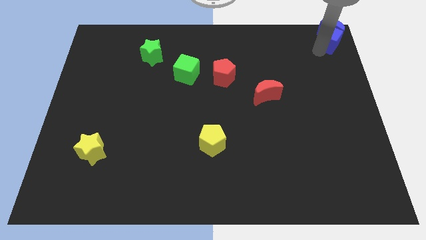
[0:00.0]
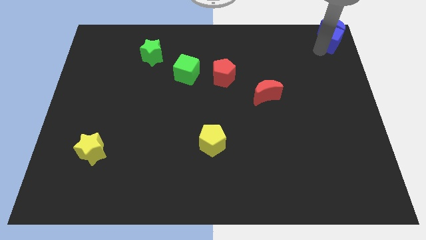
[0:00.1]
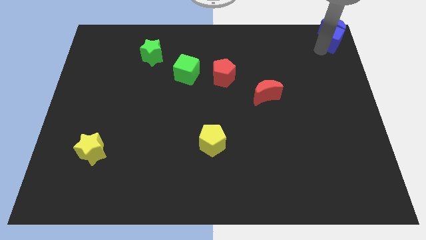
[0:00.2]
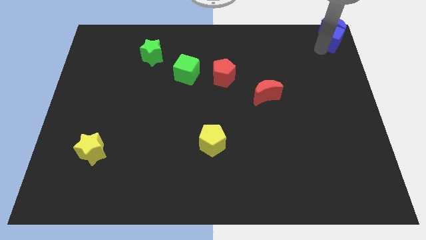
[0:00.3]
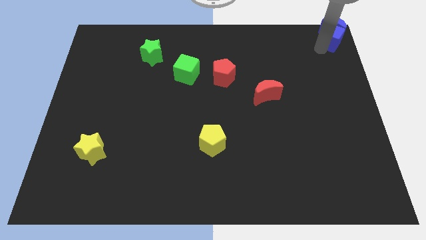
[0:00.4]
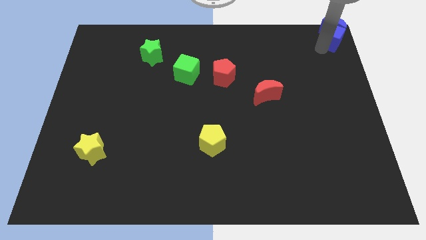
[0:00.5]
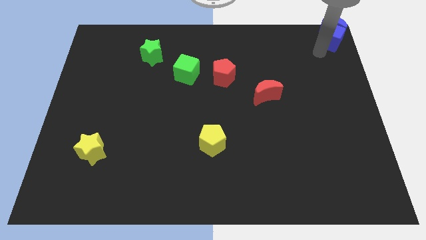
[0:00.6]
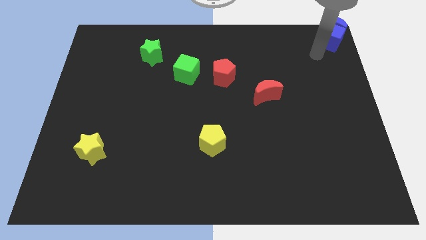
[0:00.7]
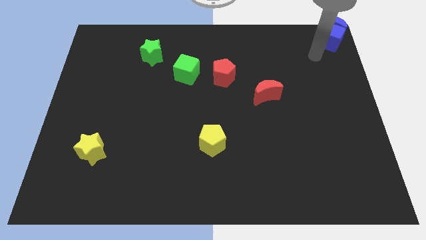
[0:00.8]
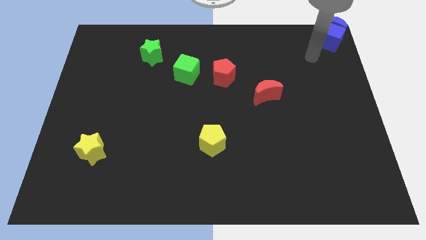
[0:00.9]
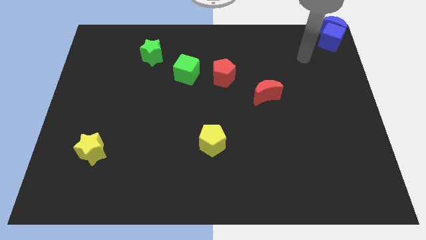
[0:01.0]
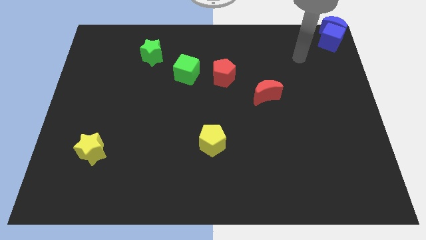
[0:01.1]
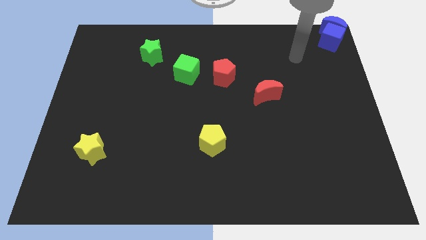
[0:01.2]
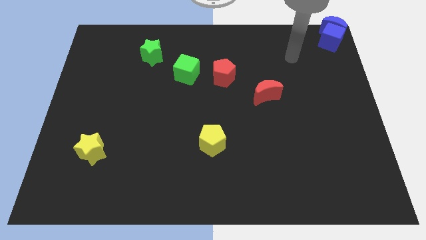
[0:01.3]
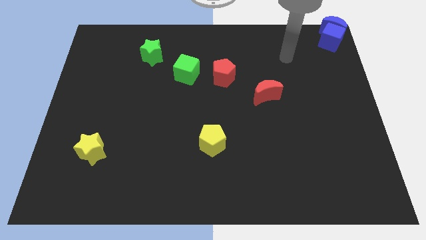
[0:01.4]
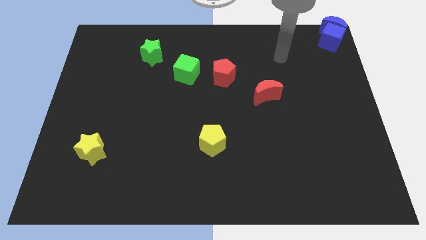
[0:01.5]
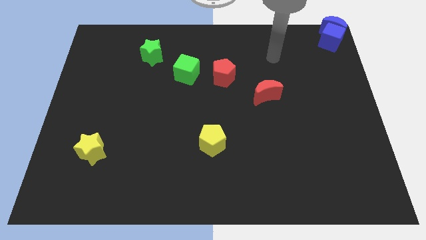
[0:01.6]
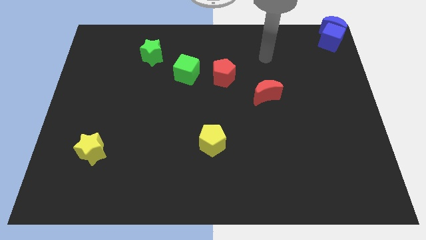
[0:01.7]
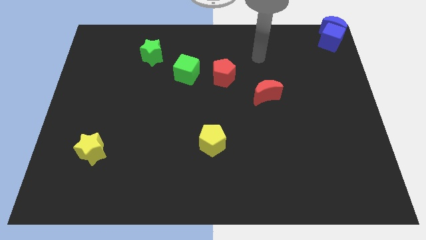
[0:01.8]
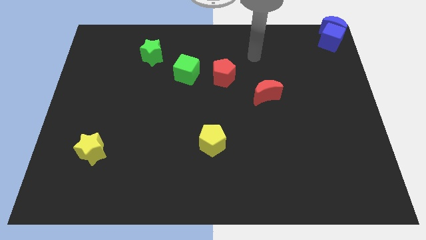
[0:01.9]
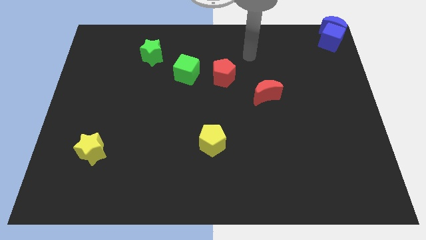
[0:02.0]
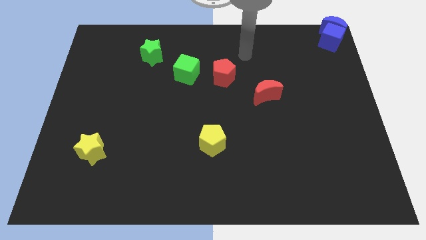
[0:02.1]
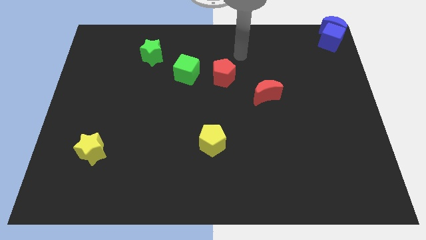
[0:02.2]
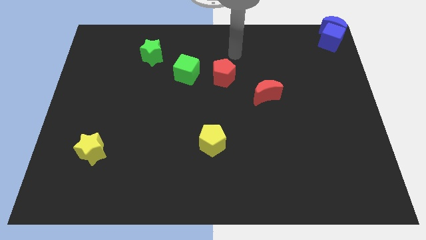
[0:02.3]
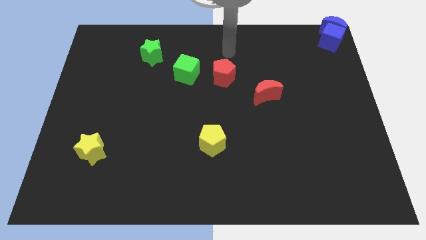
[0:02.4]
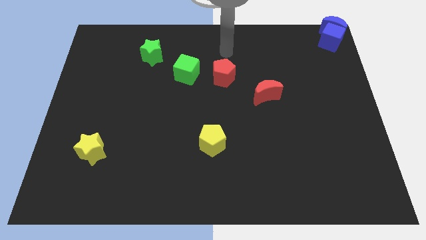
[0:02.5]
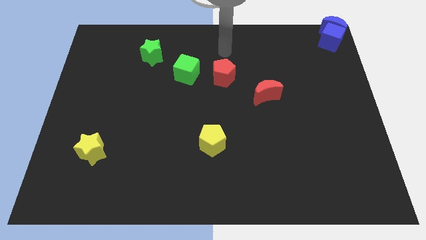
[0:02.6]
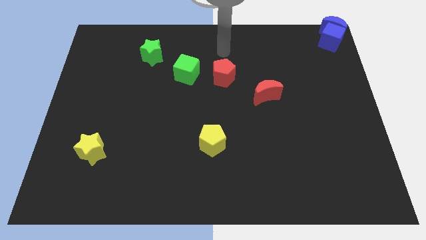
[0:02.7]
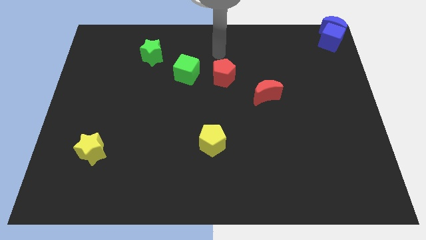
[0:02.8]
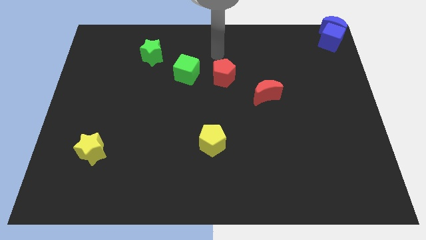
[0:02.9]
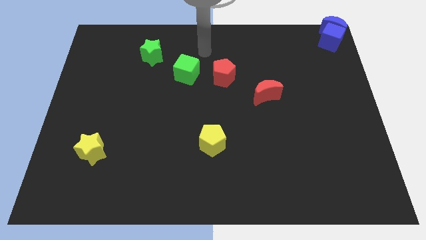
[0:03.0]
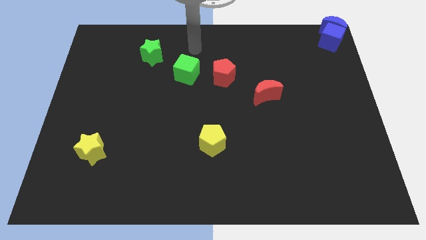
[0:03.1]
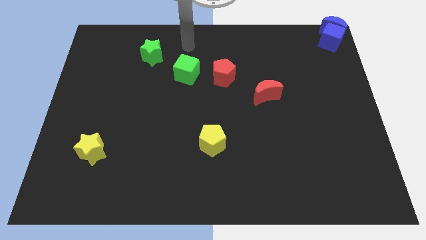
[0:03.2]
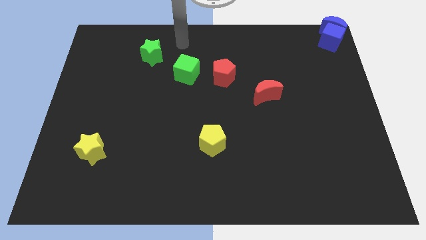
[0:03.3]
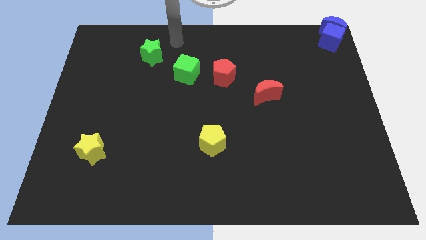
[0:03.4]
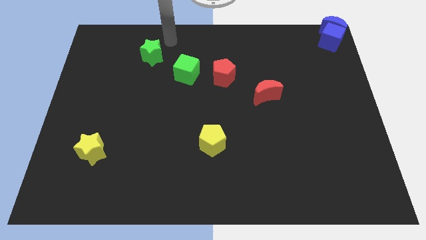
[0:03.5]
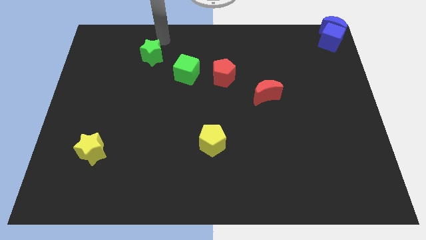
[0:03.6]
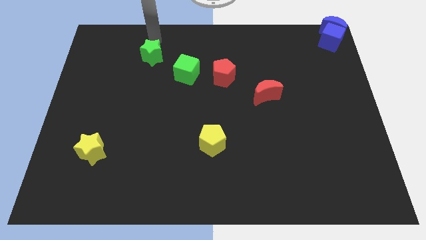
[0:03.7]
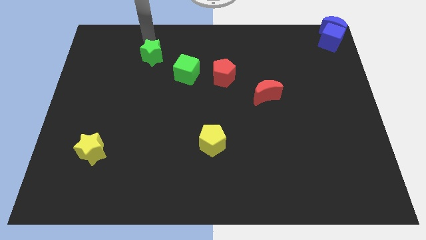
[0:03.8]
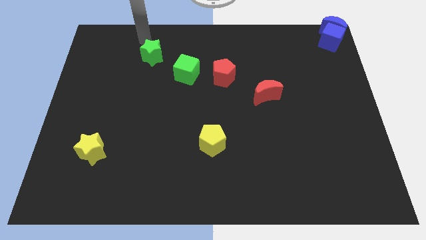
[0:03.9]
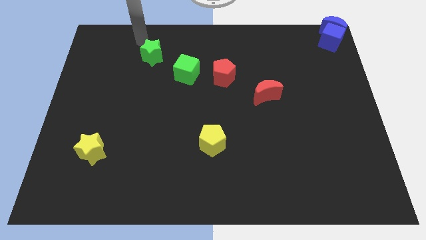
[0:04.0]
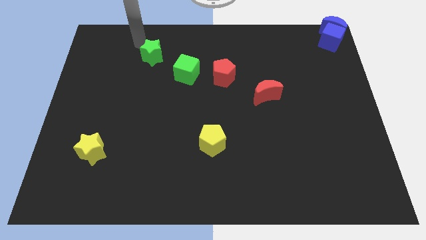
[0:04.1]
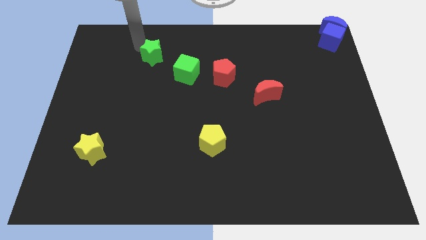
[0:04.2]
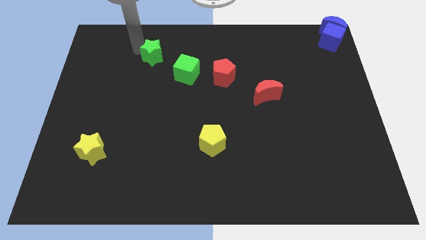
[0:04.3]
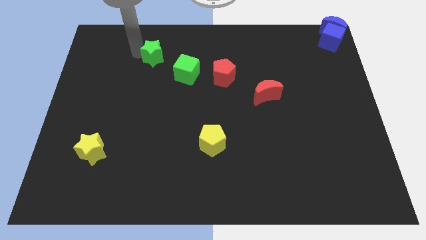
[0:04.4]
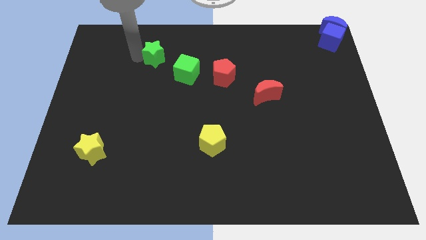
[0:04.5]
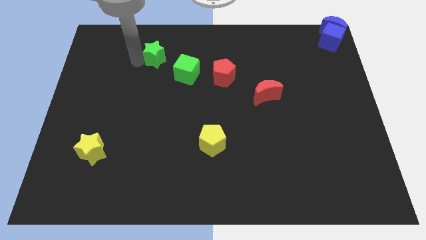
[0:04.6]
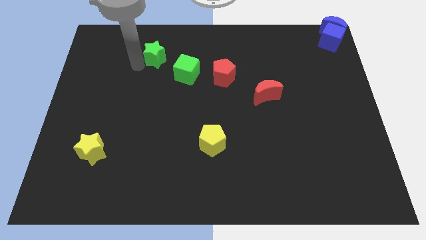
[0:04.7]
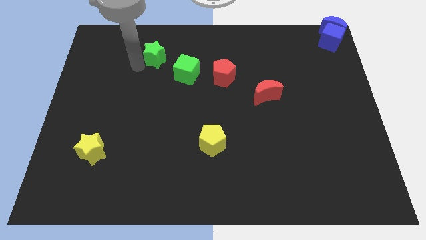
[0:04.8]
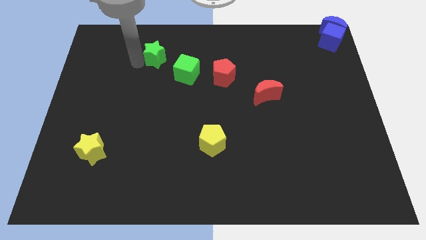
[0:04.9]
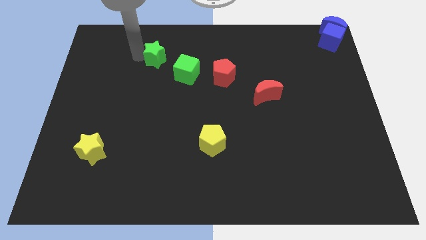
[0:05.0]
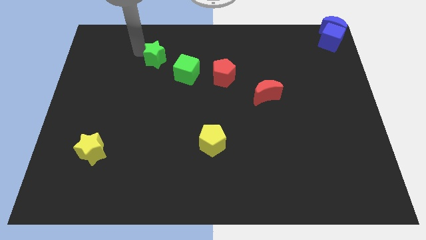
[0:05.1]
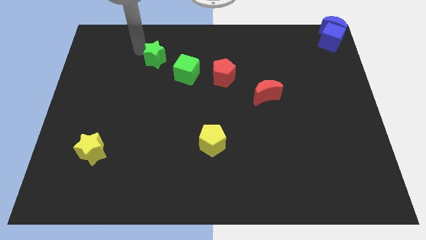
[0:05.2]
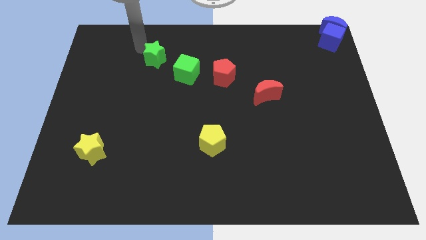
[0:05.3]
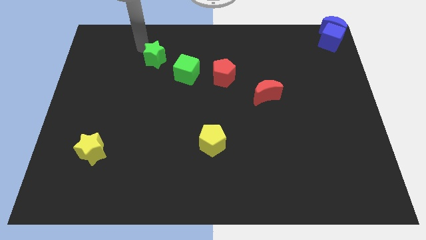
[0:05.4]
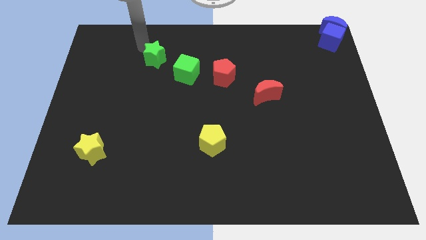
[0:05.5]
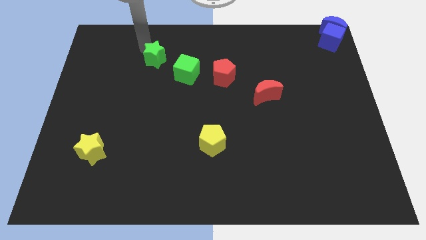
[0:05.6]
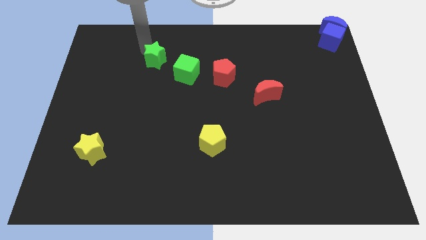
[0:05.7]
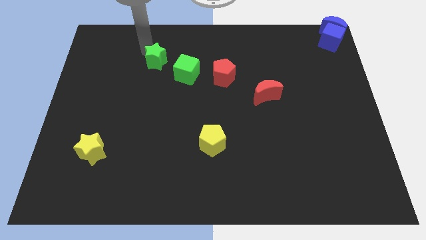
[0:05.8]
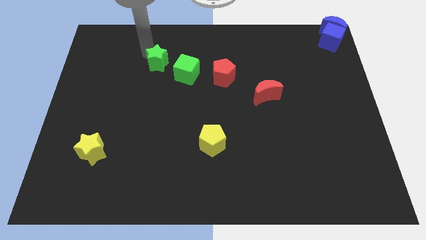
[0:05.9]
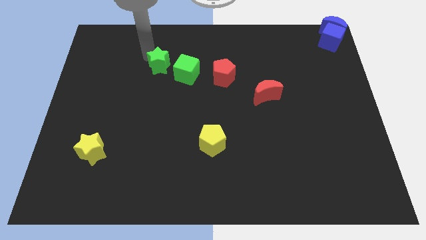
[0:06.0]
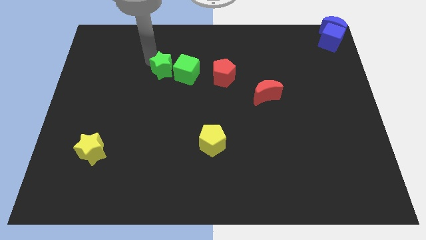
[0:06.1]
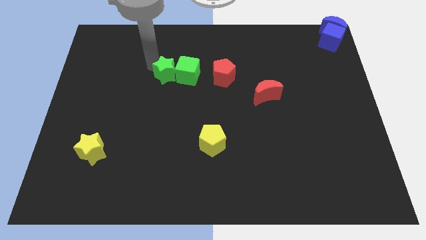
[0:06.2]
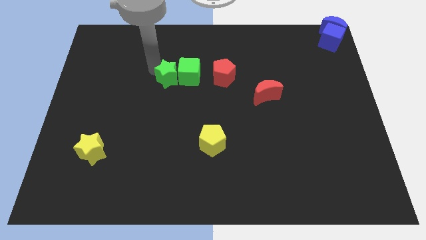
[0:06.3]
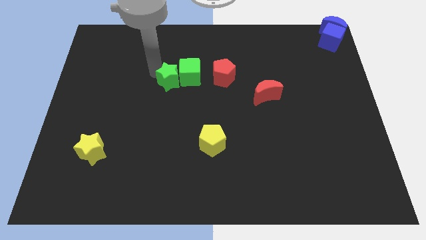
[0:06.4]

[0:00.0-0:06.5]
move the green star slightly to the green cube

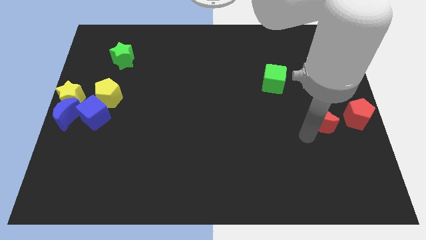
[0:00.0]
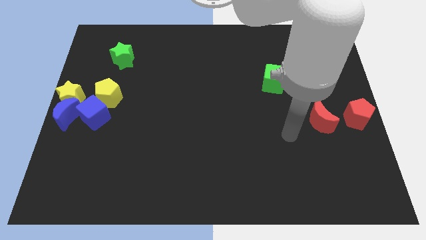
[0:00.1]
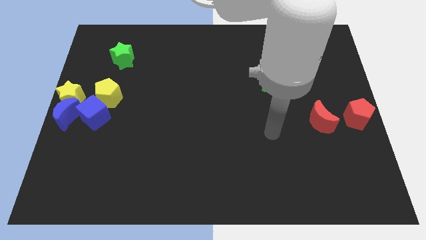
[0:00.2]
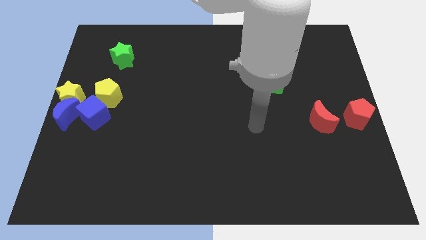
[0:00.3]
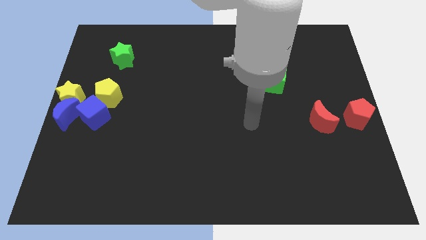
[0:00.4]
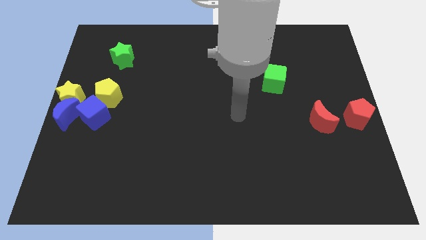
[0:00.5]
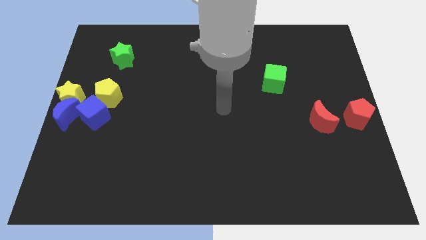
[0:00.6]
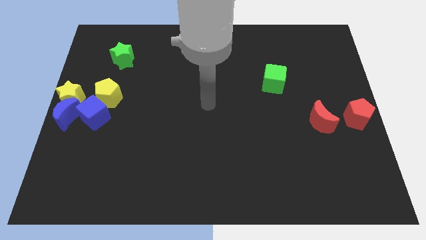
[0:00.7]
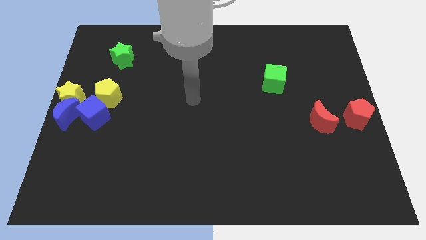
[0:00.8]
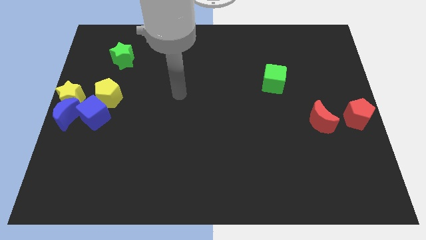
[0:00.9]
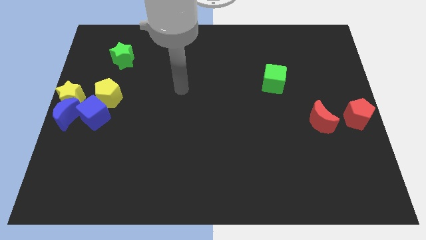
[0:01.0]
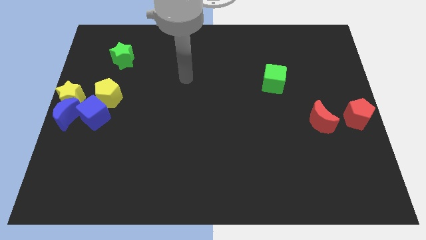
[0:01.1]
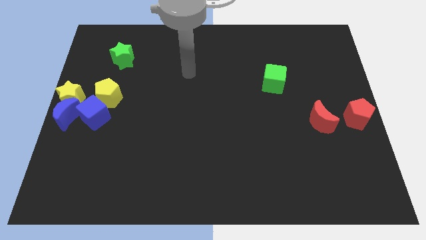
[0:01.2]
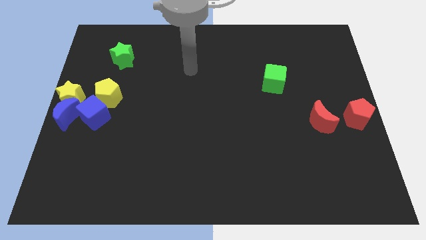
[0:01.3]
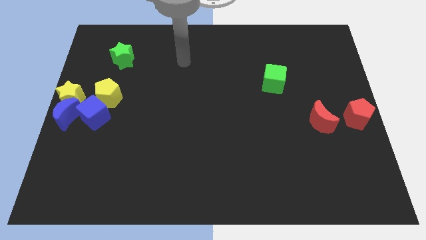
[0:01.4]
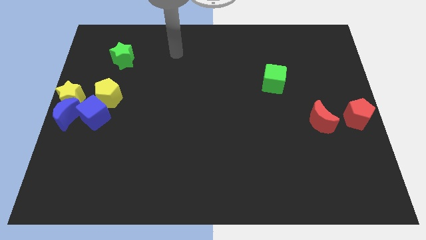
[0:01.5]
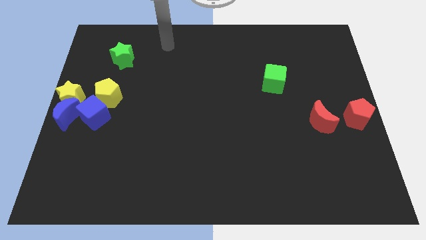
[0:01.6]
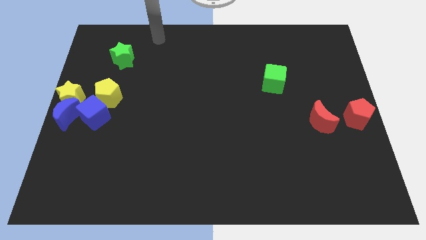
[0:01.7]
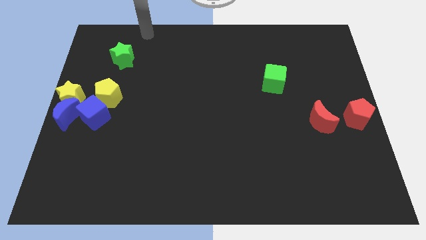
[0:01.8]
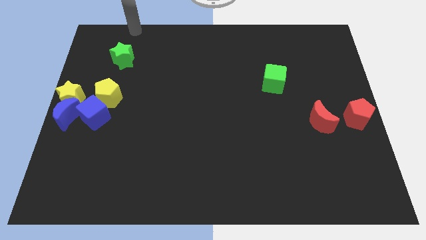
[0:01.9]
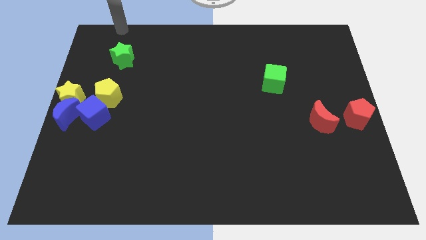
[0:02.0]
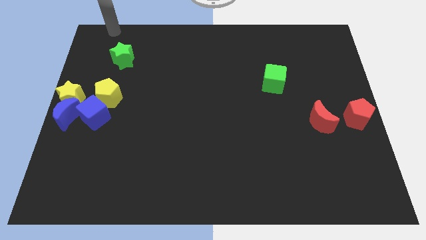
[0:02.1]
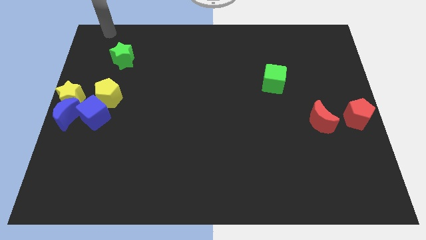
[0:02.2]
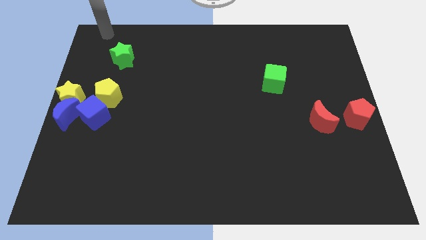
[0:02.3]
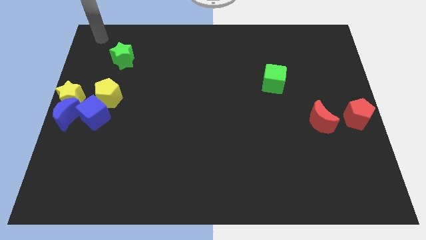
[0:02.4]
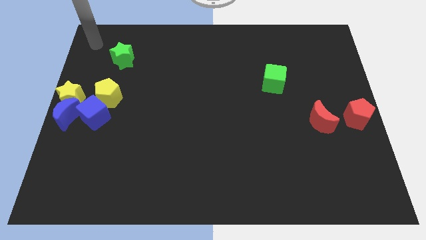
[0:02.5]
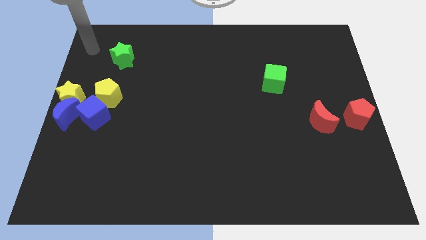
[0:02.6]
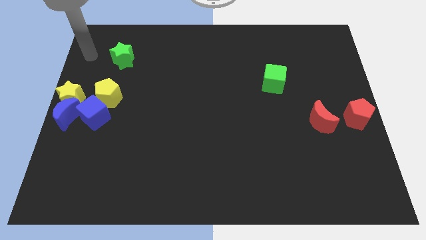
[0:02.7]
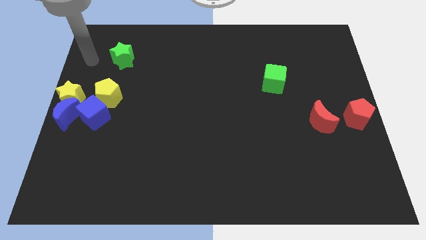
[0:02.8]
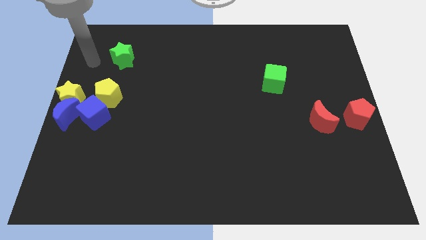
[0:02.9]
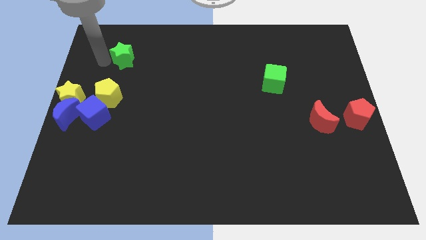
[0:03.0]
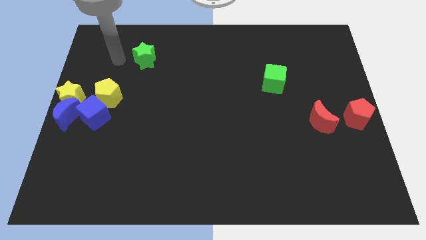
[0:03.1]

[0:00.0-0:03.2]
point your hand at the left side of the green star
